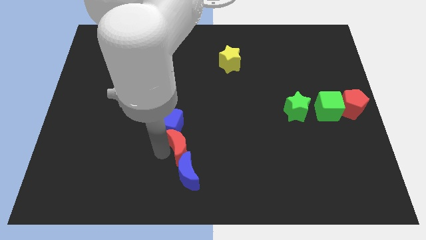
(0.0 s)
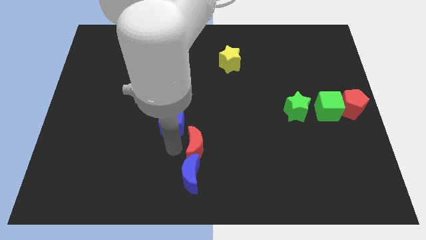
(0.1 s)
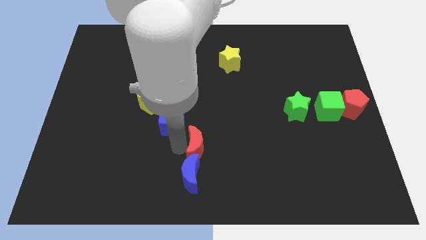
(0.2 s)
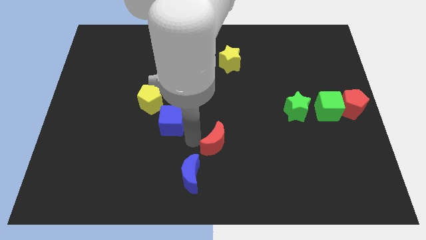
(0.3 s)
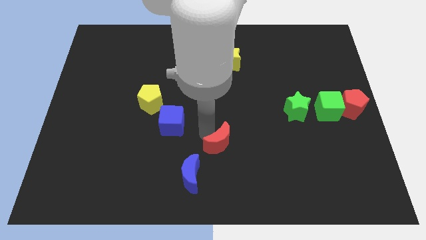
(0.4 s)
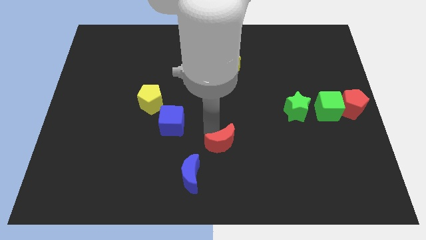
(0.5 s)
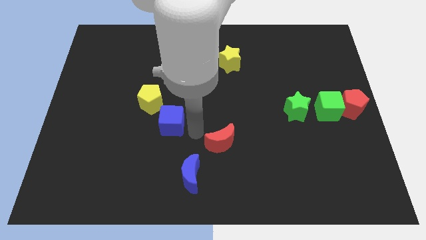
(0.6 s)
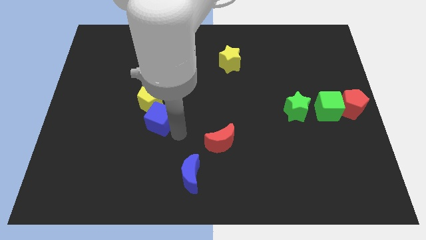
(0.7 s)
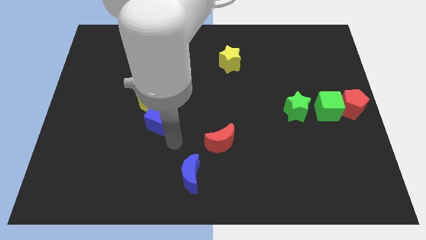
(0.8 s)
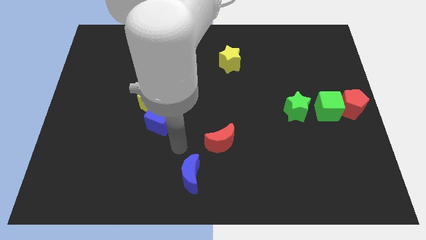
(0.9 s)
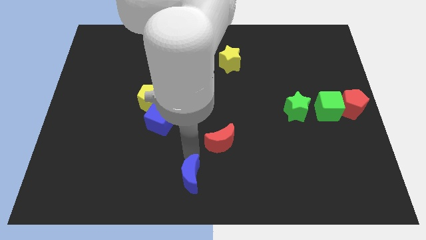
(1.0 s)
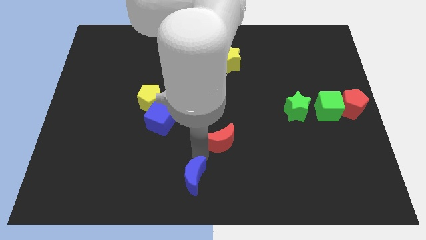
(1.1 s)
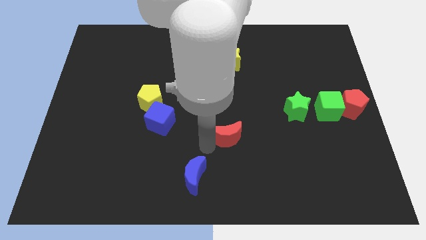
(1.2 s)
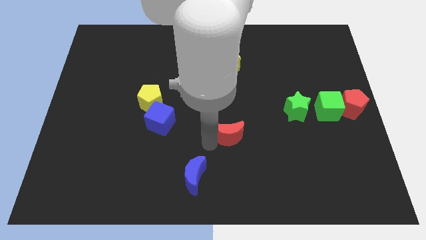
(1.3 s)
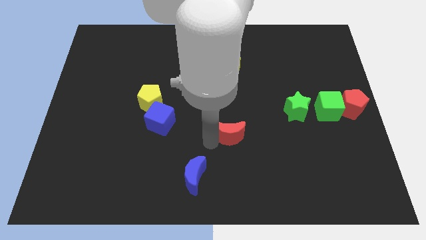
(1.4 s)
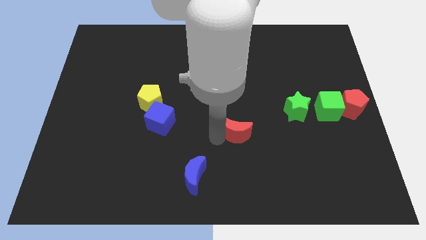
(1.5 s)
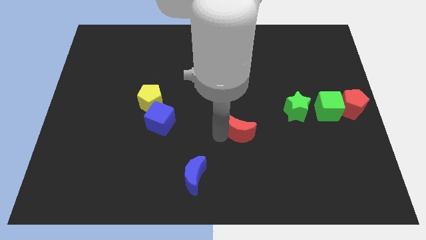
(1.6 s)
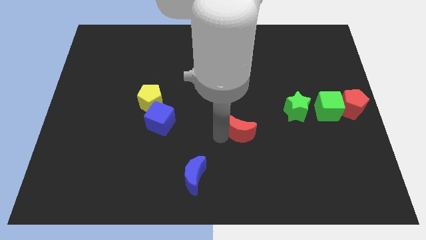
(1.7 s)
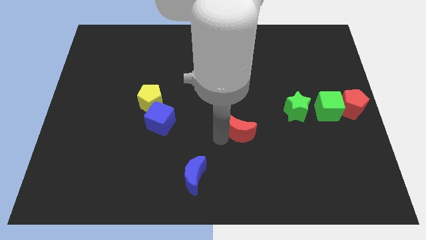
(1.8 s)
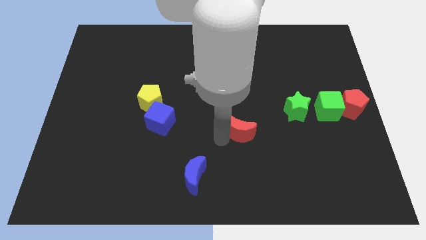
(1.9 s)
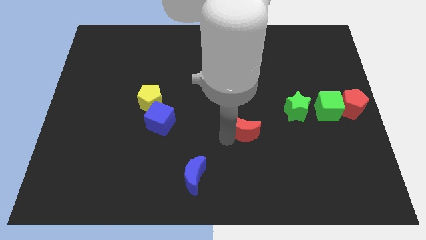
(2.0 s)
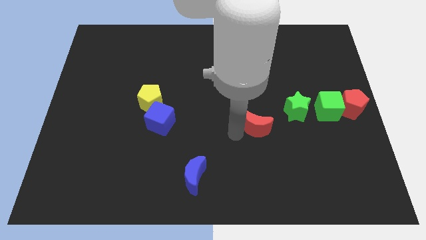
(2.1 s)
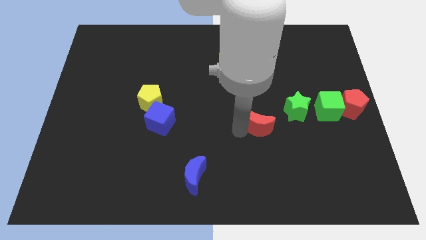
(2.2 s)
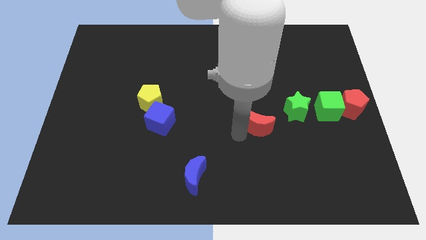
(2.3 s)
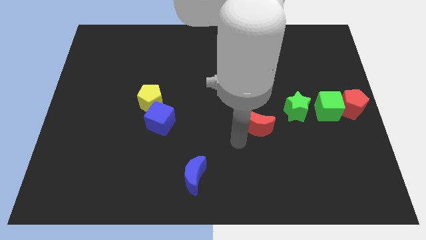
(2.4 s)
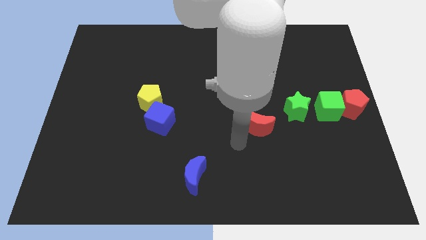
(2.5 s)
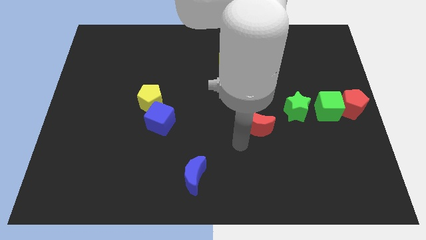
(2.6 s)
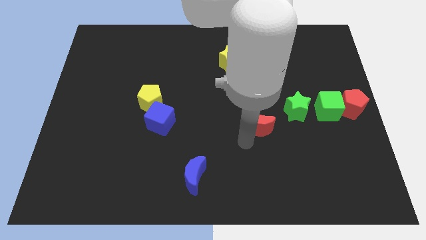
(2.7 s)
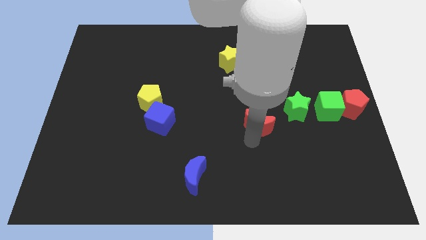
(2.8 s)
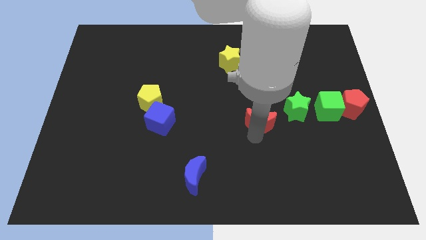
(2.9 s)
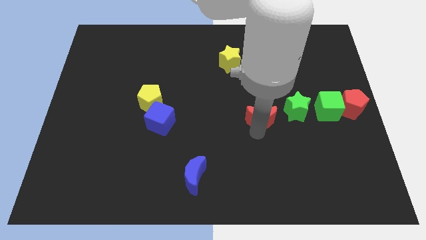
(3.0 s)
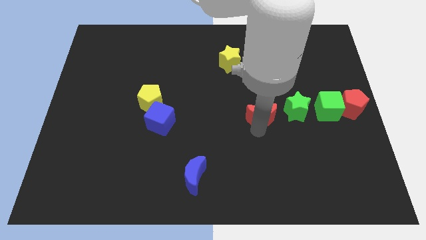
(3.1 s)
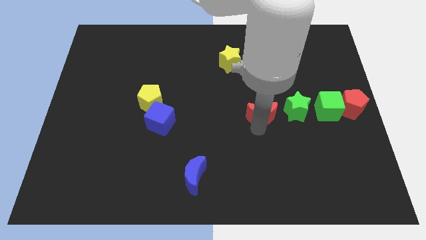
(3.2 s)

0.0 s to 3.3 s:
separate the blue cube and red moon

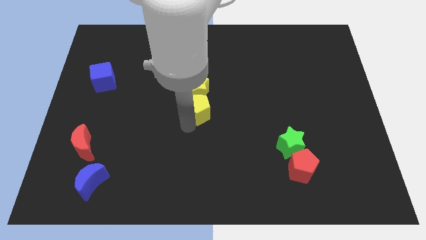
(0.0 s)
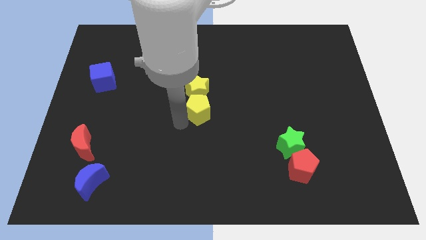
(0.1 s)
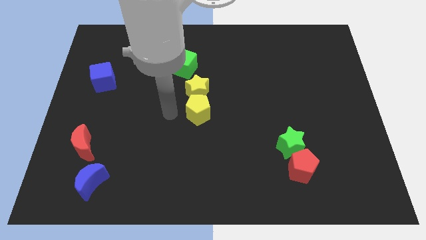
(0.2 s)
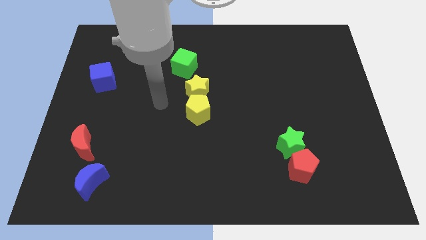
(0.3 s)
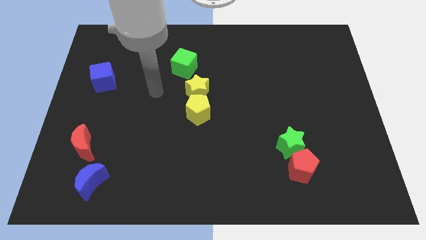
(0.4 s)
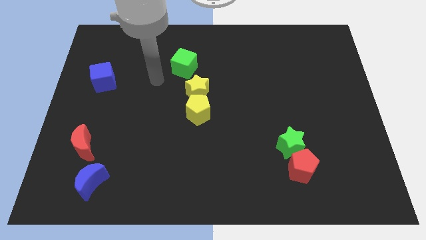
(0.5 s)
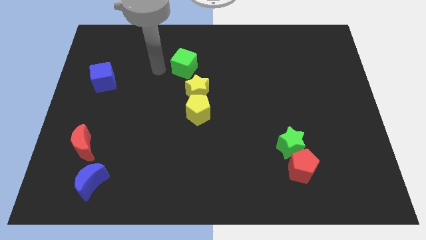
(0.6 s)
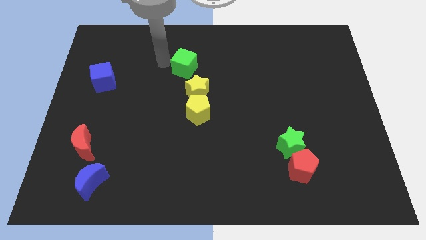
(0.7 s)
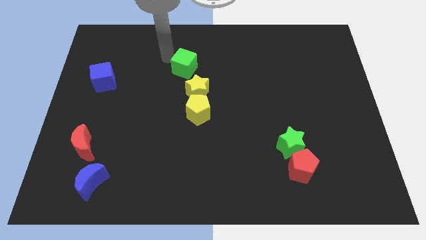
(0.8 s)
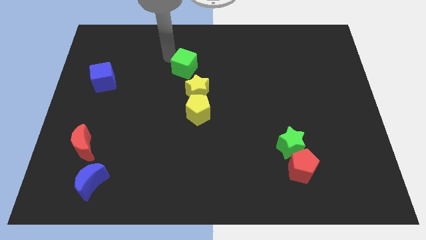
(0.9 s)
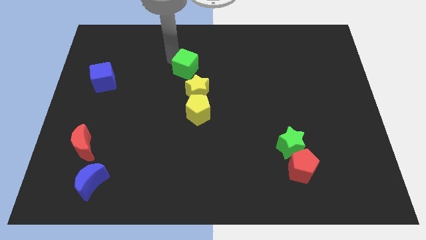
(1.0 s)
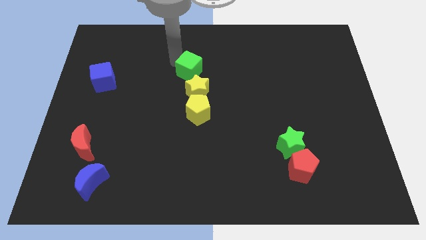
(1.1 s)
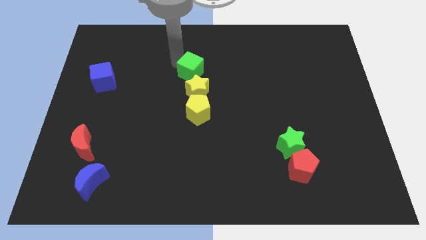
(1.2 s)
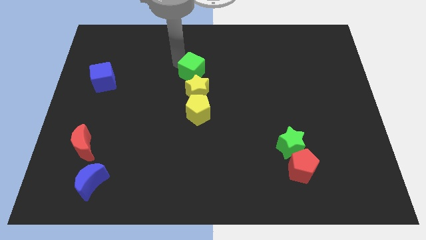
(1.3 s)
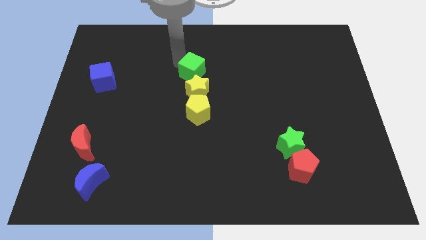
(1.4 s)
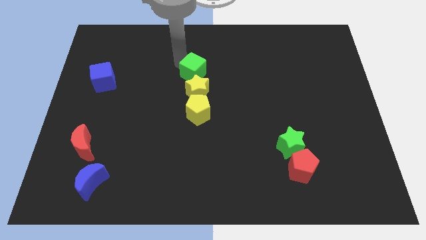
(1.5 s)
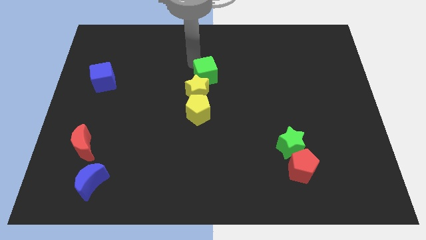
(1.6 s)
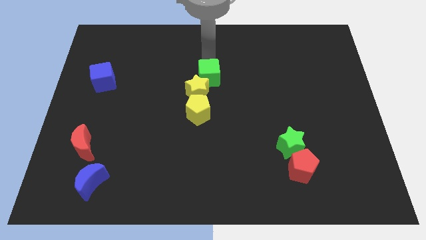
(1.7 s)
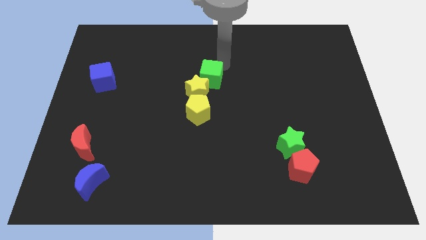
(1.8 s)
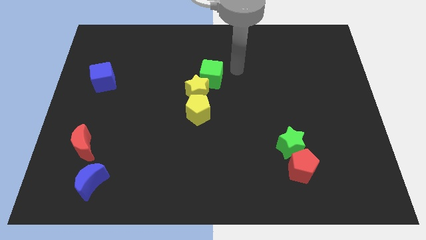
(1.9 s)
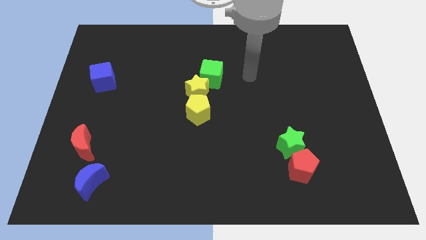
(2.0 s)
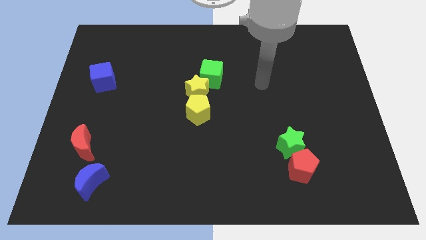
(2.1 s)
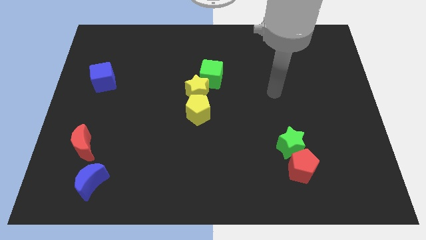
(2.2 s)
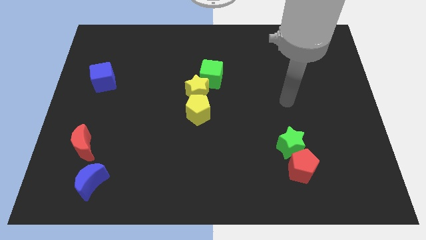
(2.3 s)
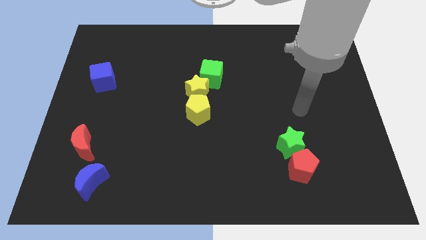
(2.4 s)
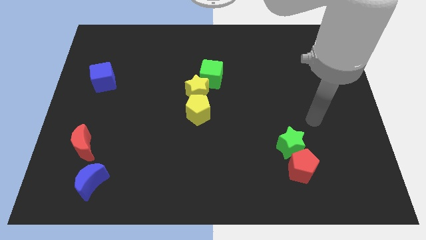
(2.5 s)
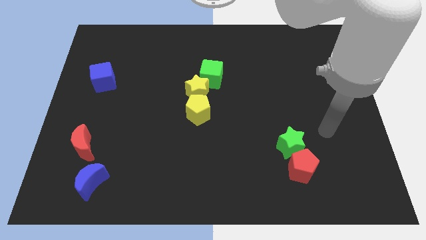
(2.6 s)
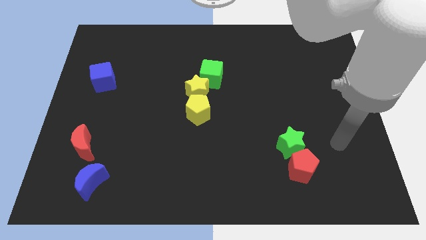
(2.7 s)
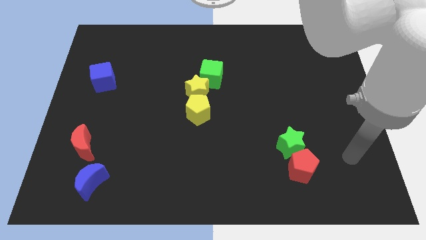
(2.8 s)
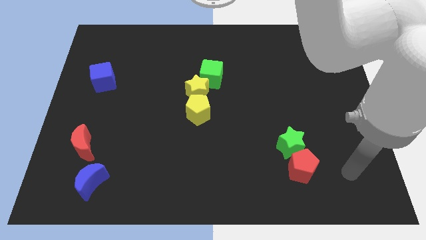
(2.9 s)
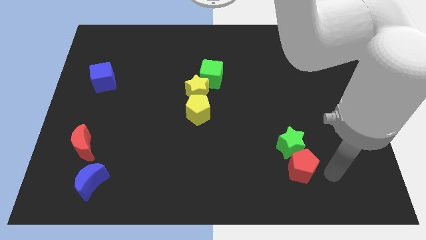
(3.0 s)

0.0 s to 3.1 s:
move the green cube diagonal top right to the yellow star

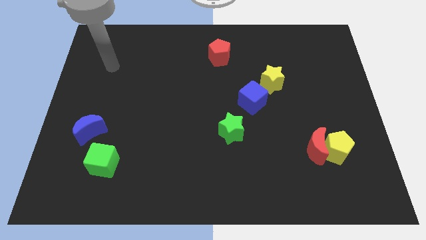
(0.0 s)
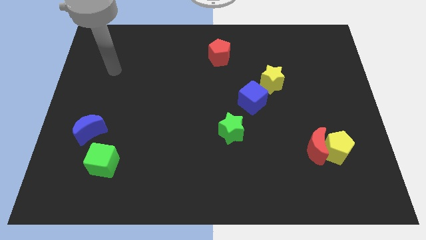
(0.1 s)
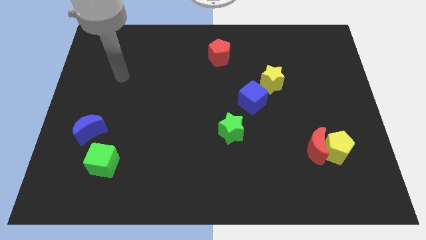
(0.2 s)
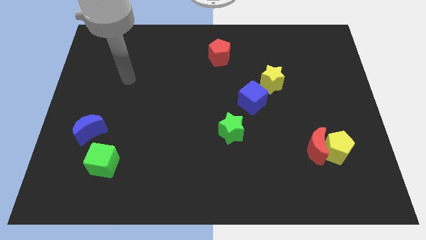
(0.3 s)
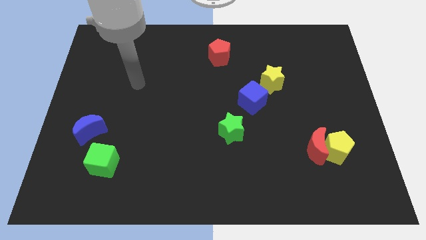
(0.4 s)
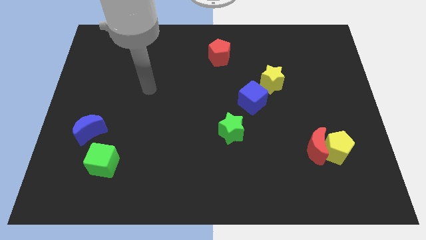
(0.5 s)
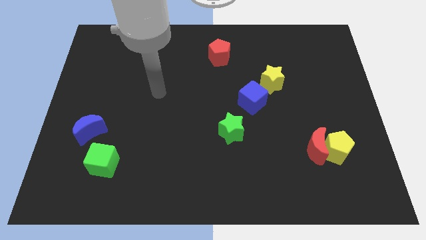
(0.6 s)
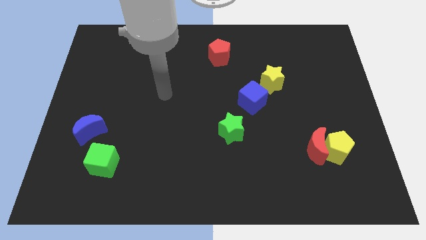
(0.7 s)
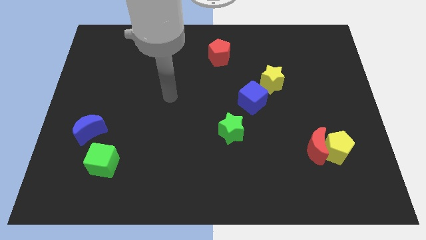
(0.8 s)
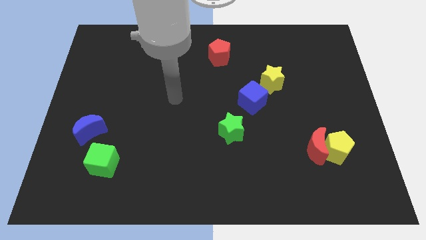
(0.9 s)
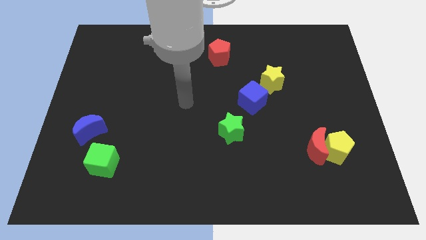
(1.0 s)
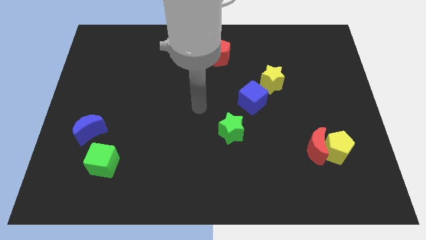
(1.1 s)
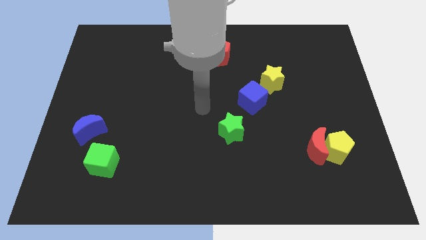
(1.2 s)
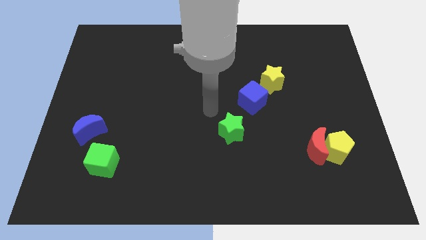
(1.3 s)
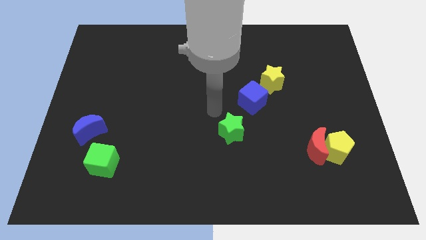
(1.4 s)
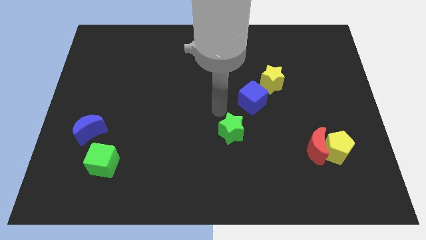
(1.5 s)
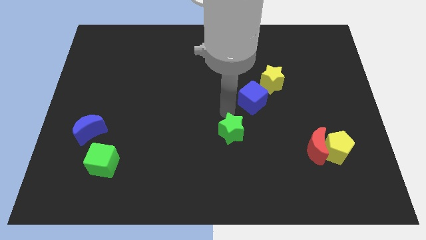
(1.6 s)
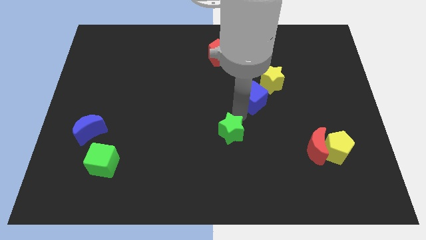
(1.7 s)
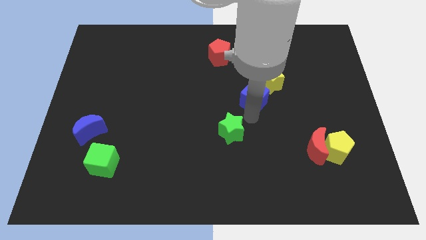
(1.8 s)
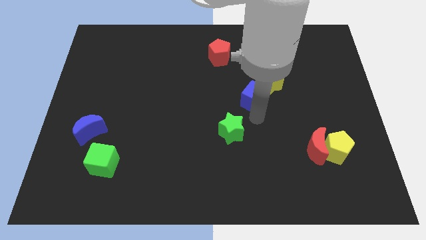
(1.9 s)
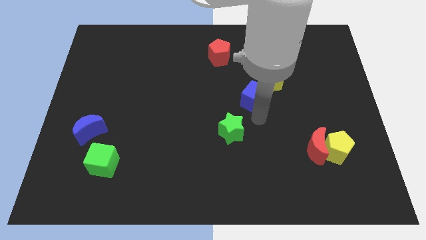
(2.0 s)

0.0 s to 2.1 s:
tap on the bottom side of blue cube

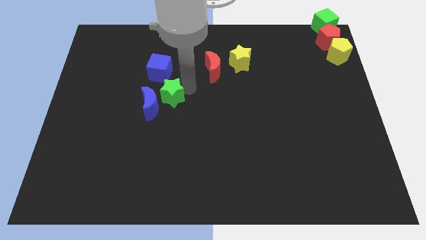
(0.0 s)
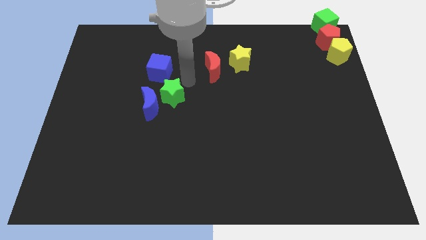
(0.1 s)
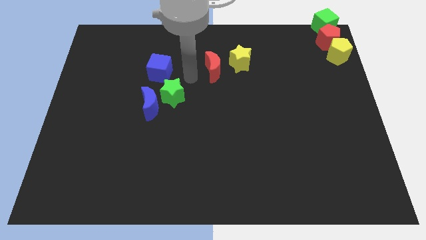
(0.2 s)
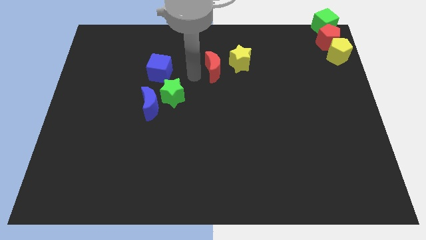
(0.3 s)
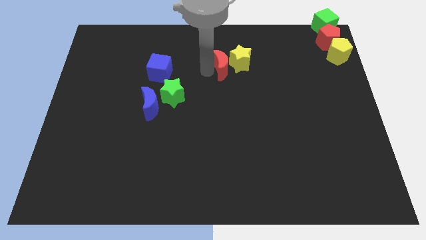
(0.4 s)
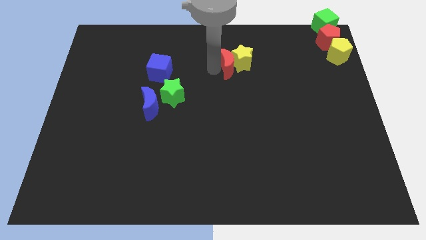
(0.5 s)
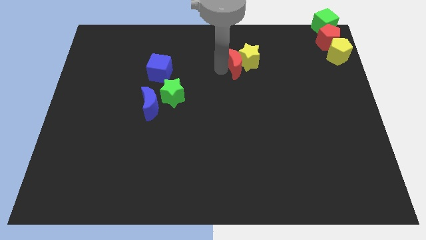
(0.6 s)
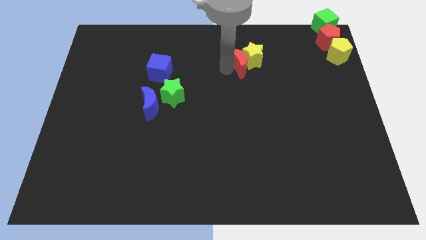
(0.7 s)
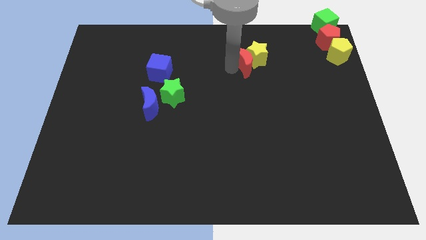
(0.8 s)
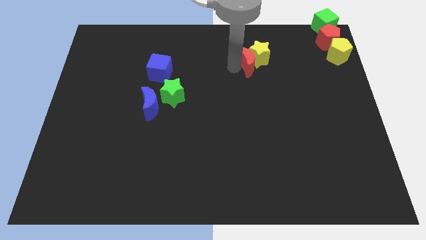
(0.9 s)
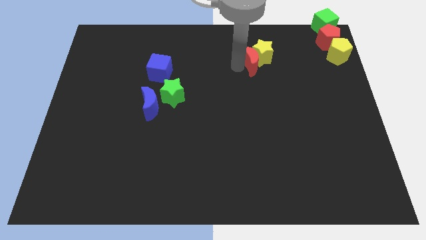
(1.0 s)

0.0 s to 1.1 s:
move red moon into yellow star
